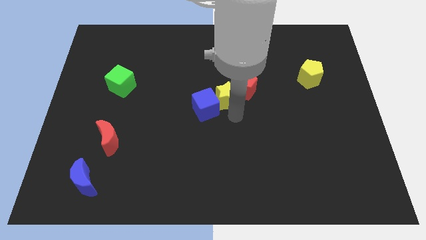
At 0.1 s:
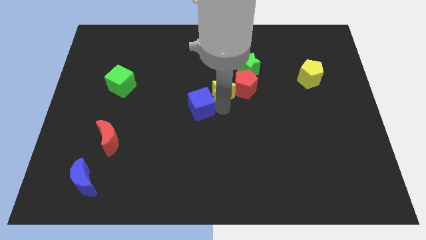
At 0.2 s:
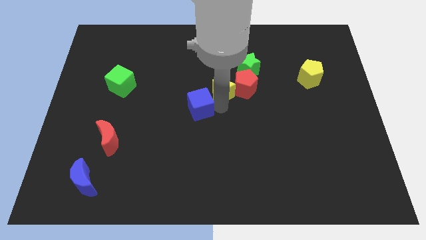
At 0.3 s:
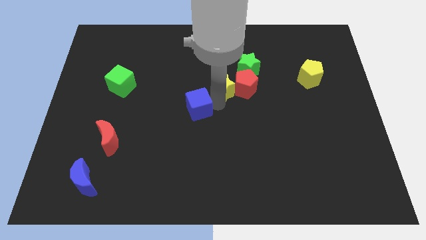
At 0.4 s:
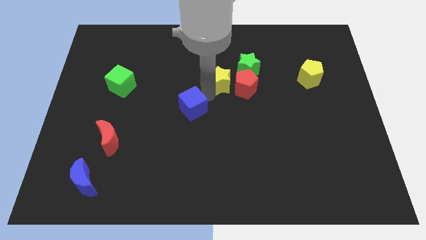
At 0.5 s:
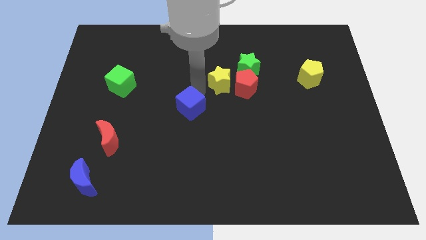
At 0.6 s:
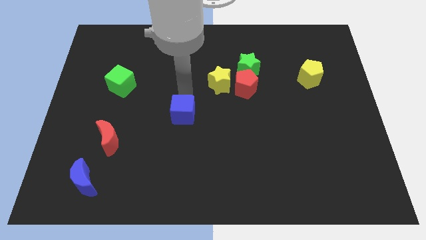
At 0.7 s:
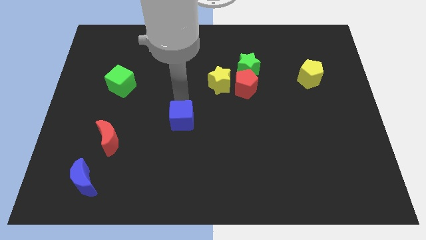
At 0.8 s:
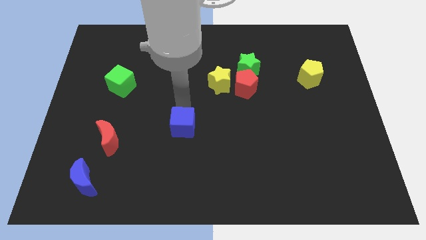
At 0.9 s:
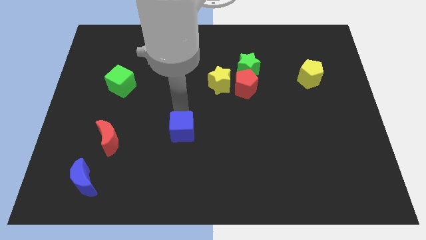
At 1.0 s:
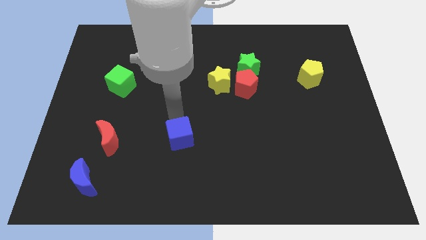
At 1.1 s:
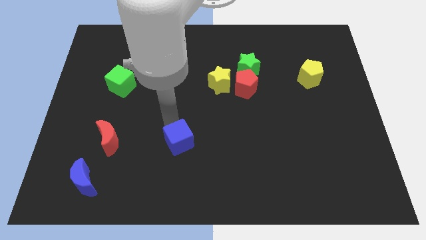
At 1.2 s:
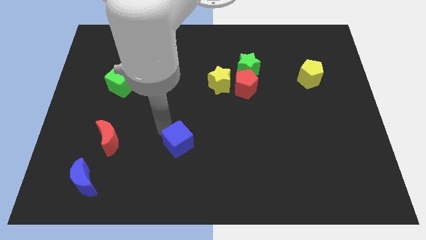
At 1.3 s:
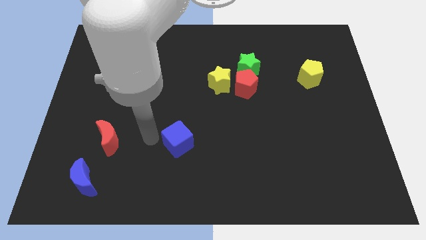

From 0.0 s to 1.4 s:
push the blue cube to the right side of the red crescent

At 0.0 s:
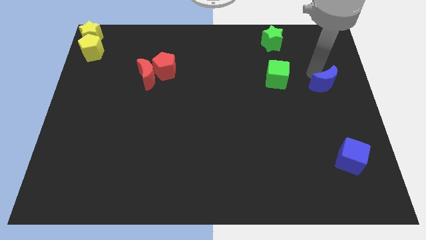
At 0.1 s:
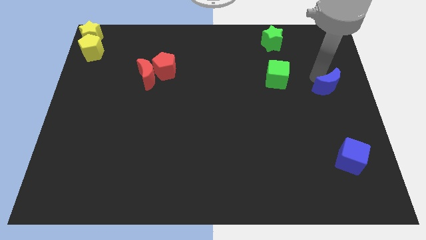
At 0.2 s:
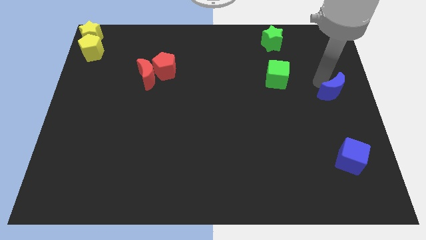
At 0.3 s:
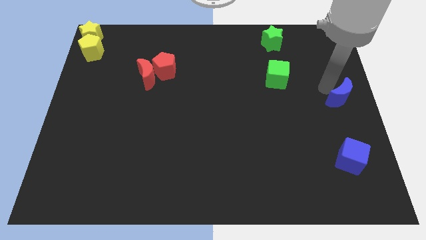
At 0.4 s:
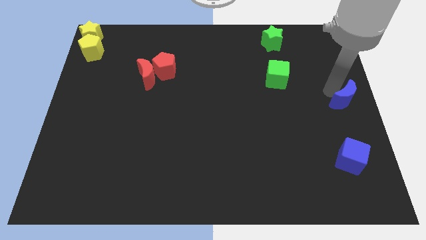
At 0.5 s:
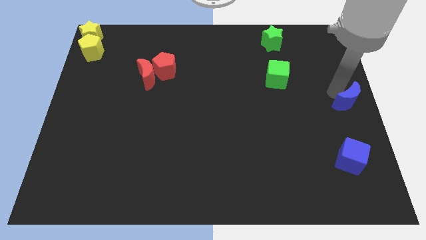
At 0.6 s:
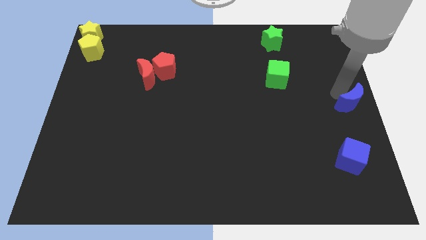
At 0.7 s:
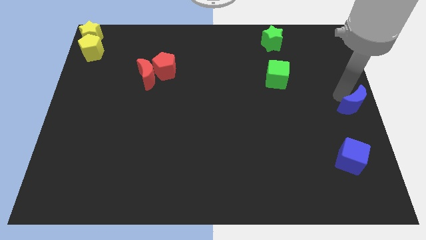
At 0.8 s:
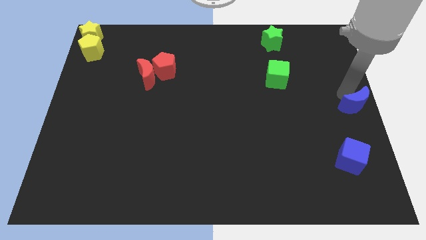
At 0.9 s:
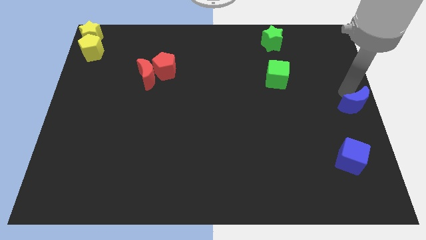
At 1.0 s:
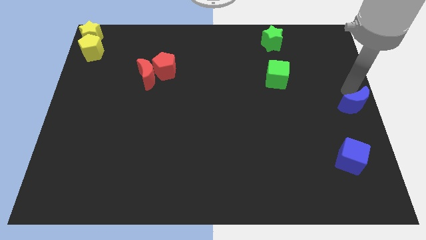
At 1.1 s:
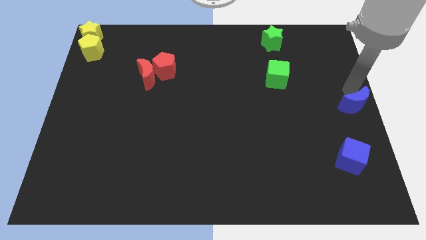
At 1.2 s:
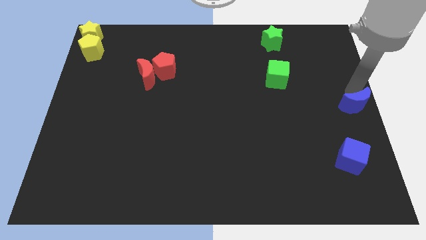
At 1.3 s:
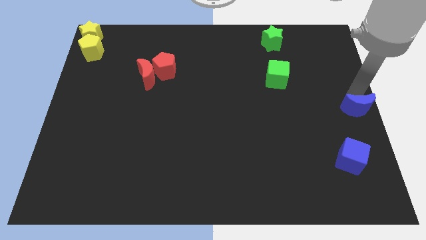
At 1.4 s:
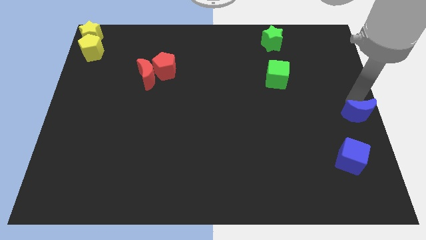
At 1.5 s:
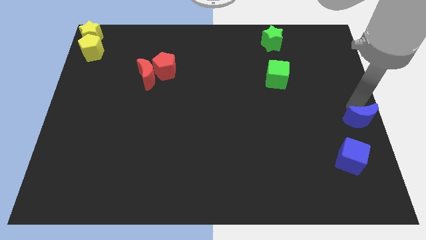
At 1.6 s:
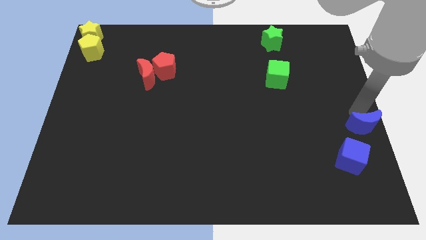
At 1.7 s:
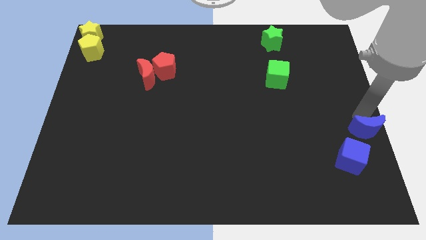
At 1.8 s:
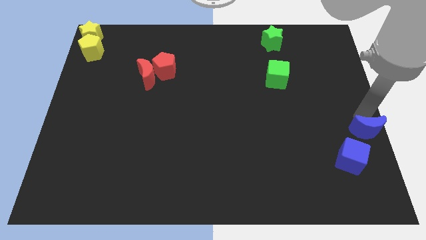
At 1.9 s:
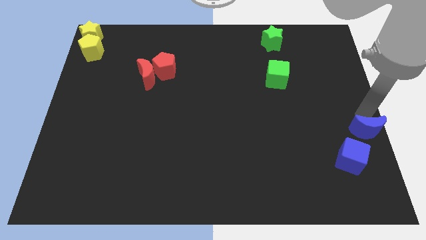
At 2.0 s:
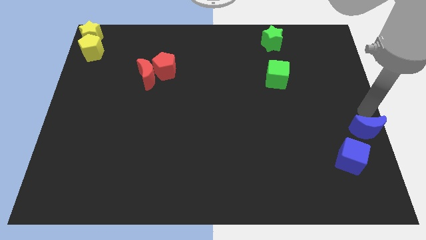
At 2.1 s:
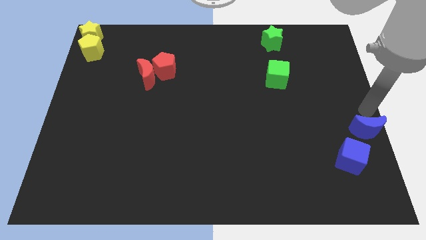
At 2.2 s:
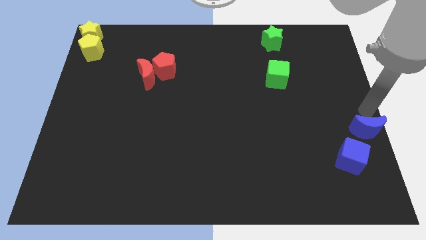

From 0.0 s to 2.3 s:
place the blue moon to top of the blue cube

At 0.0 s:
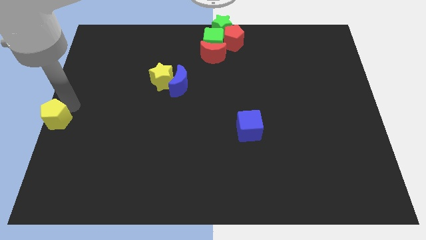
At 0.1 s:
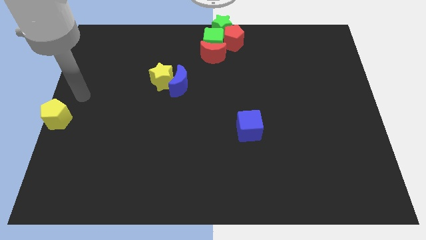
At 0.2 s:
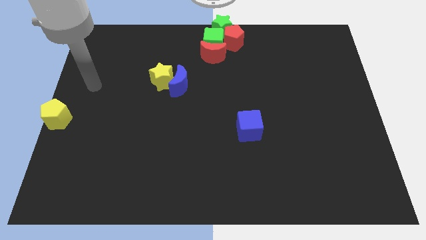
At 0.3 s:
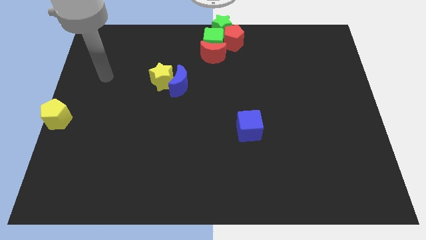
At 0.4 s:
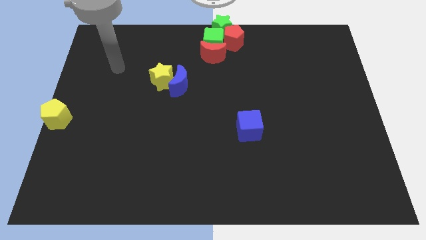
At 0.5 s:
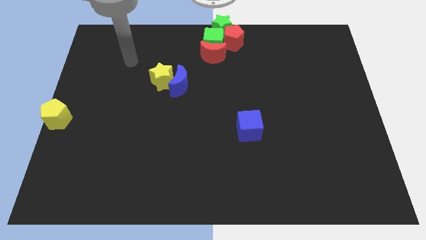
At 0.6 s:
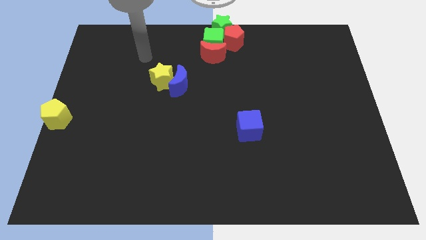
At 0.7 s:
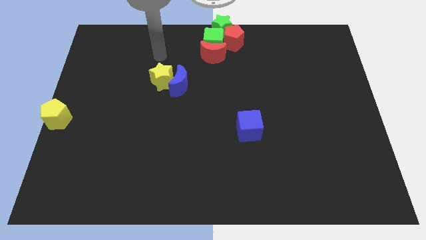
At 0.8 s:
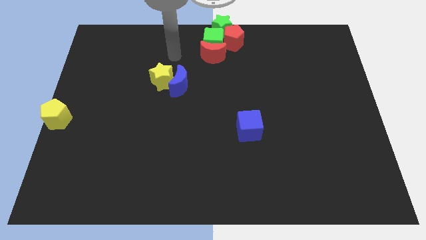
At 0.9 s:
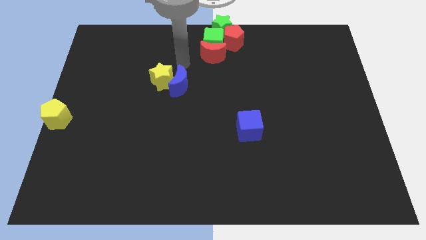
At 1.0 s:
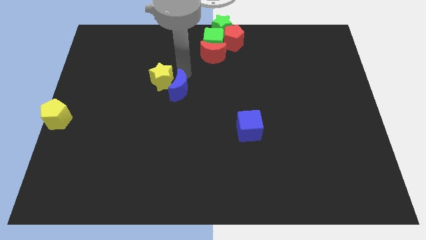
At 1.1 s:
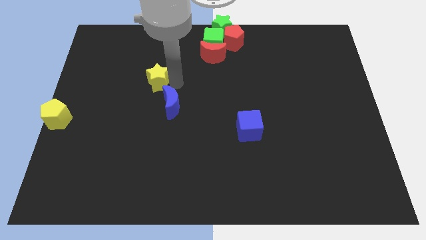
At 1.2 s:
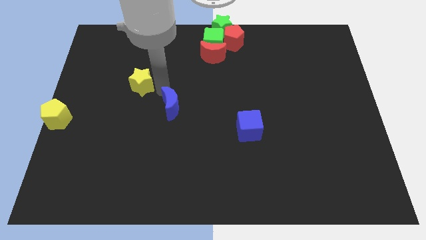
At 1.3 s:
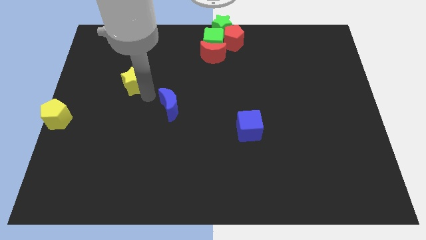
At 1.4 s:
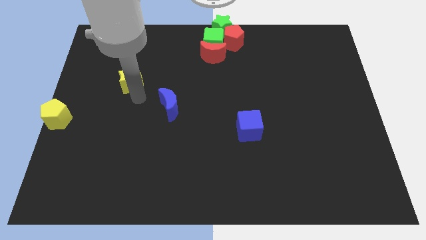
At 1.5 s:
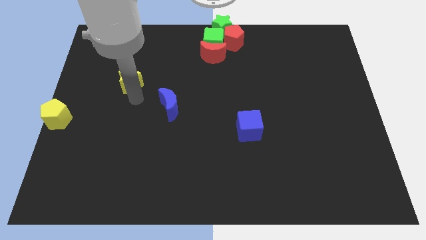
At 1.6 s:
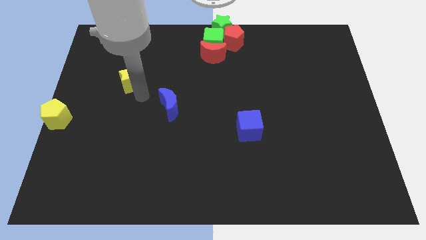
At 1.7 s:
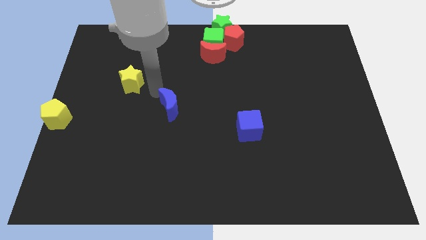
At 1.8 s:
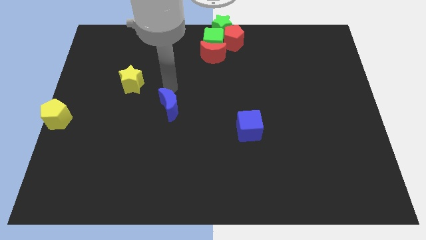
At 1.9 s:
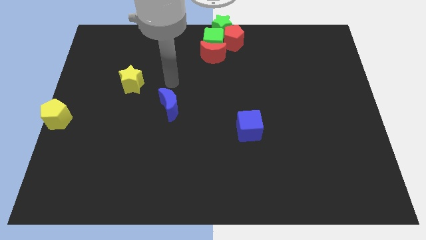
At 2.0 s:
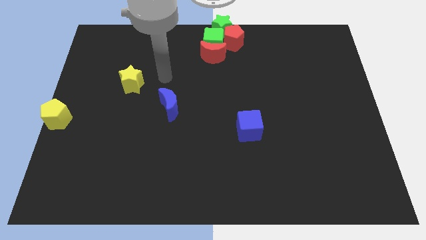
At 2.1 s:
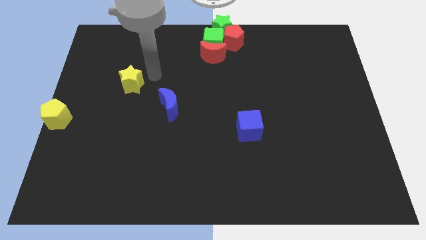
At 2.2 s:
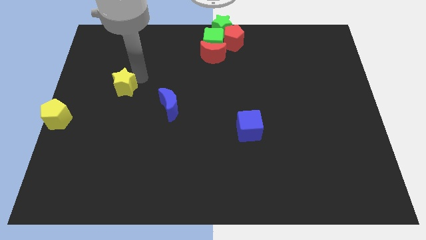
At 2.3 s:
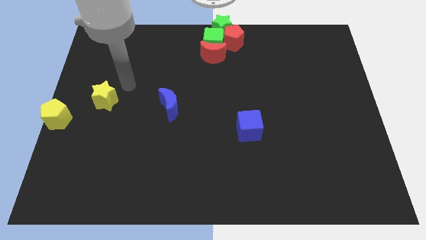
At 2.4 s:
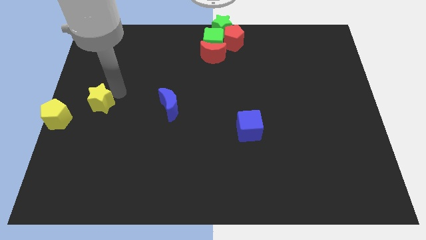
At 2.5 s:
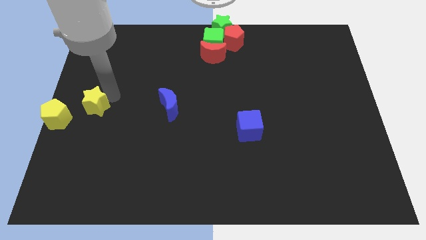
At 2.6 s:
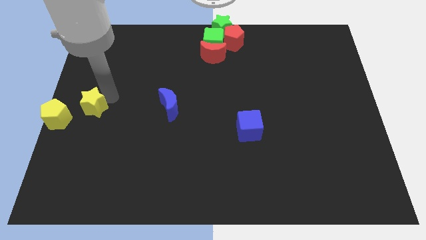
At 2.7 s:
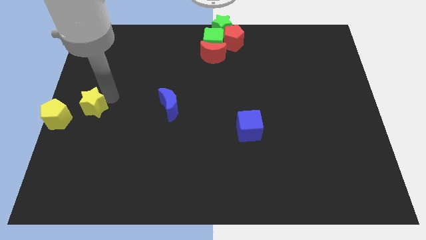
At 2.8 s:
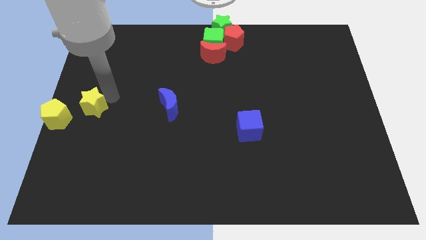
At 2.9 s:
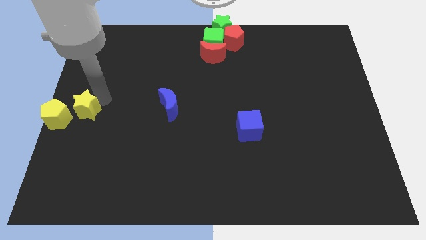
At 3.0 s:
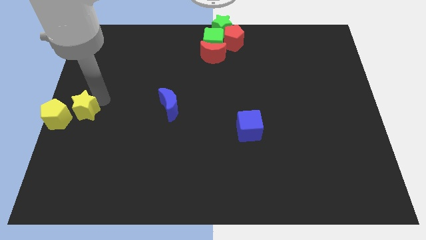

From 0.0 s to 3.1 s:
separate yellow star away from blue moon

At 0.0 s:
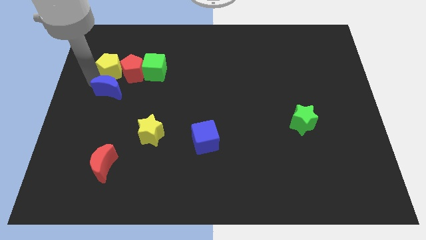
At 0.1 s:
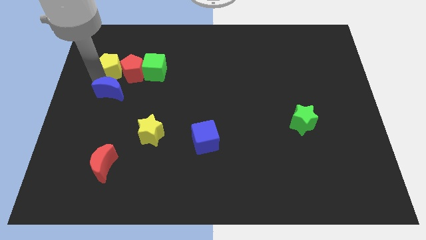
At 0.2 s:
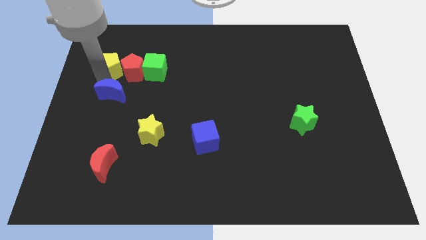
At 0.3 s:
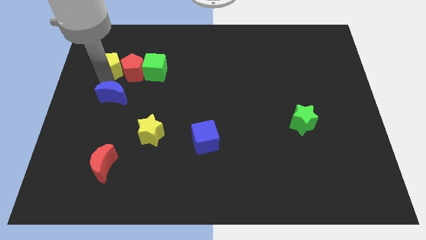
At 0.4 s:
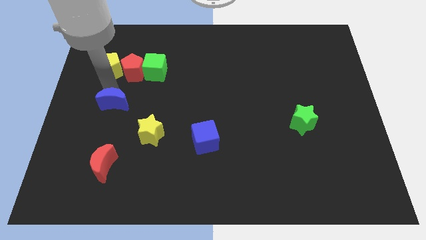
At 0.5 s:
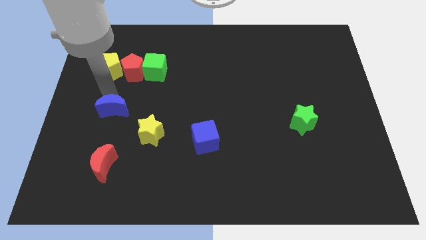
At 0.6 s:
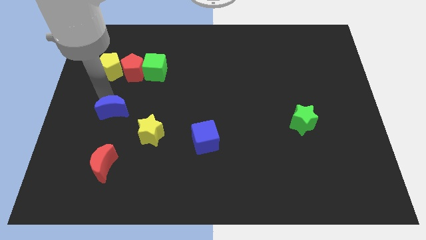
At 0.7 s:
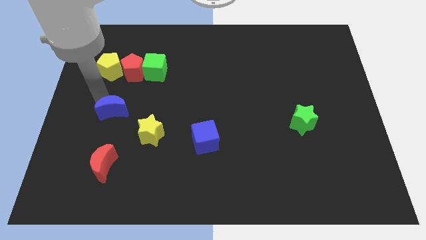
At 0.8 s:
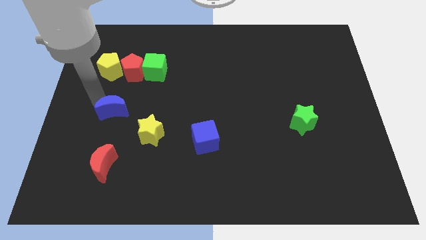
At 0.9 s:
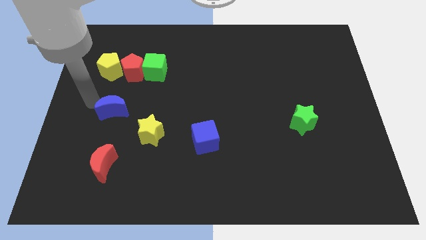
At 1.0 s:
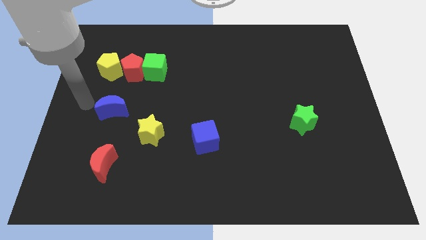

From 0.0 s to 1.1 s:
separate the blue moon from the yellow pentagon

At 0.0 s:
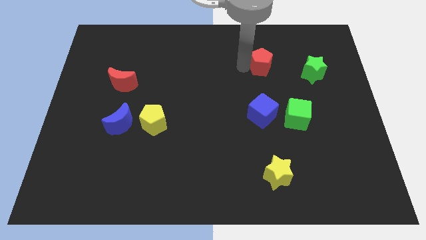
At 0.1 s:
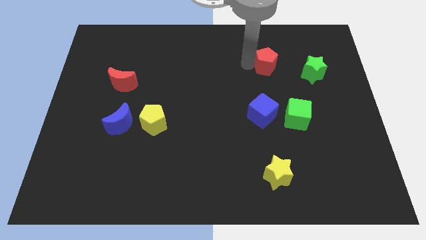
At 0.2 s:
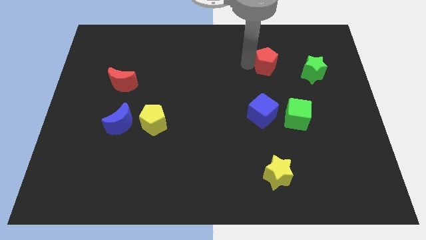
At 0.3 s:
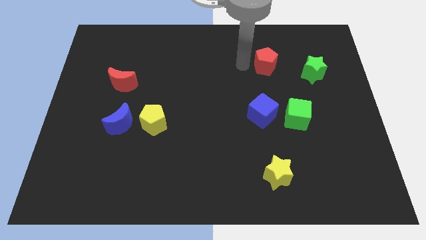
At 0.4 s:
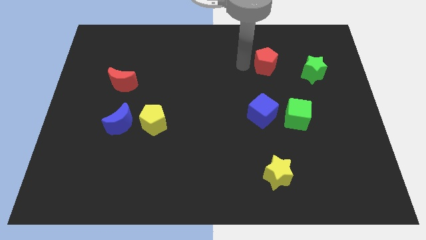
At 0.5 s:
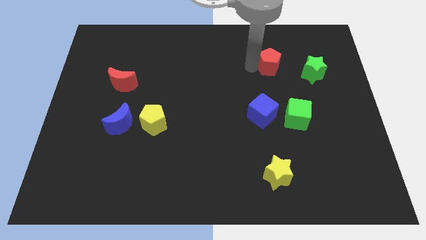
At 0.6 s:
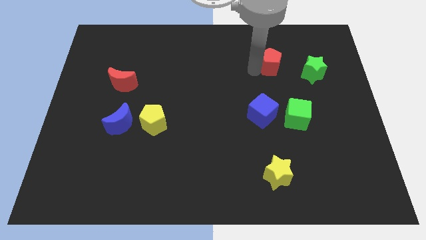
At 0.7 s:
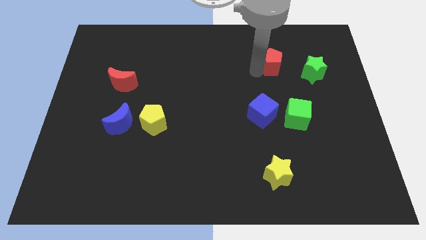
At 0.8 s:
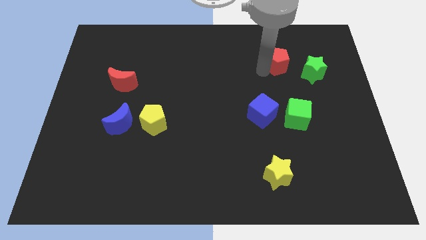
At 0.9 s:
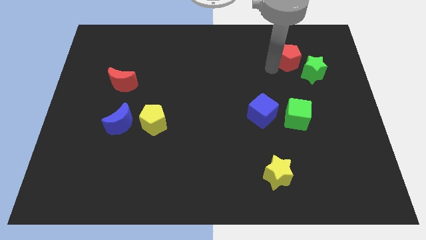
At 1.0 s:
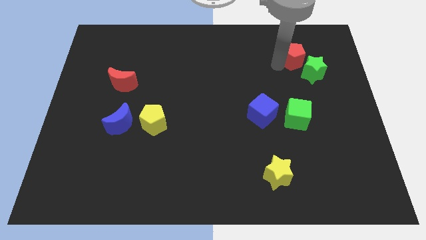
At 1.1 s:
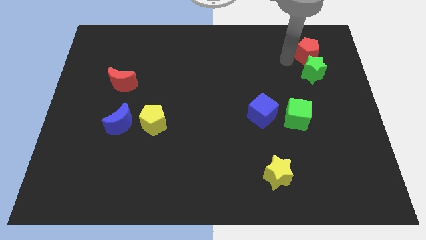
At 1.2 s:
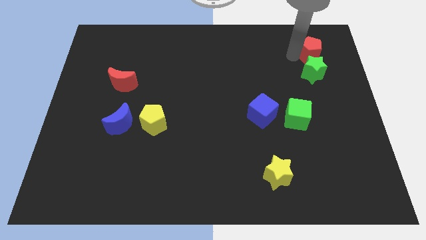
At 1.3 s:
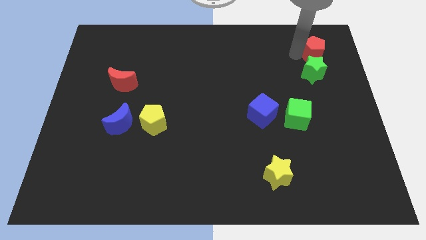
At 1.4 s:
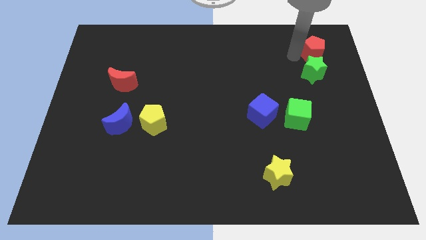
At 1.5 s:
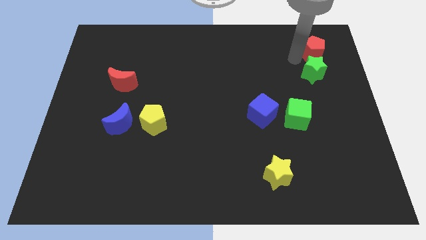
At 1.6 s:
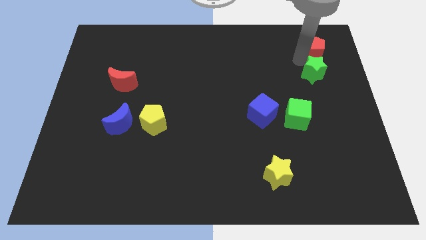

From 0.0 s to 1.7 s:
drag the red pentagon to the right side of the board
